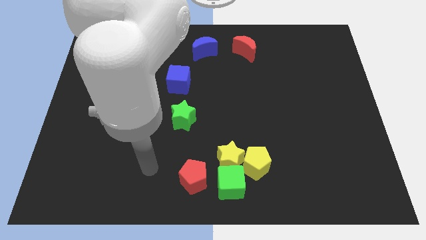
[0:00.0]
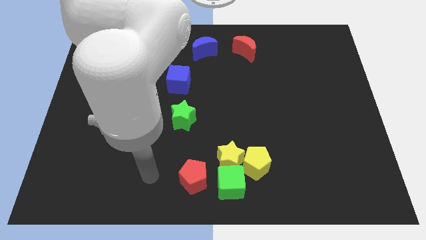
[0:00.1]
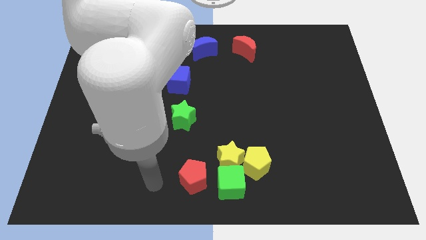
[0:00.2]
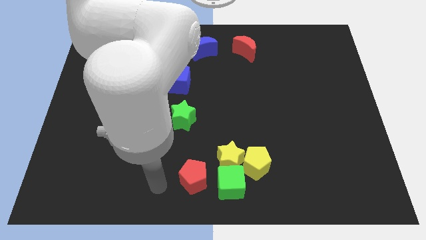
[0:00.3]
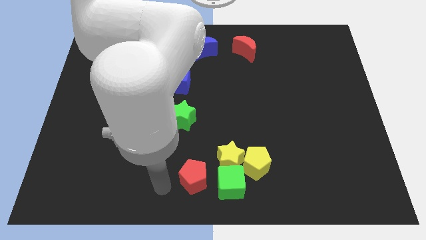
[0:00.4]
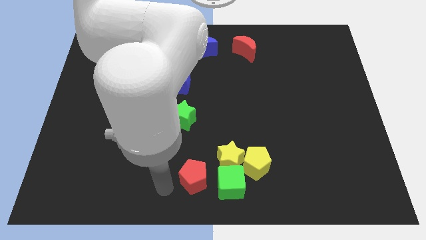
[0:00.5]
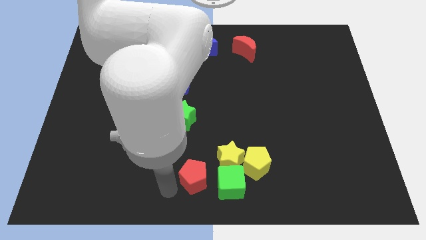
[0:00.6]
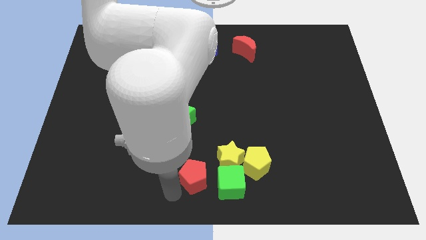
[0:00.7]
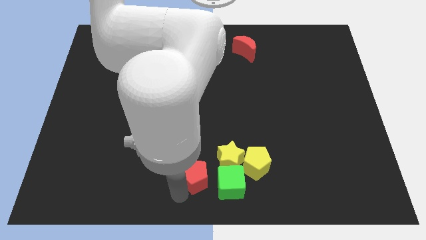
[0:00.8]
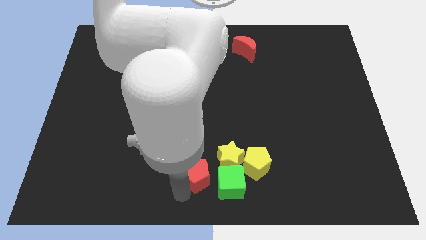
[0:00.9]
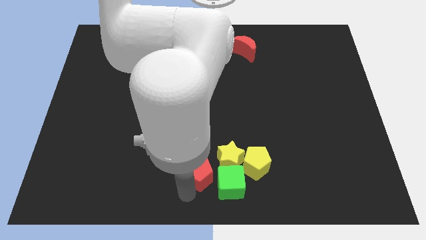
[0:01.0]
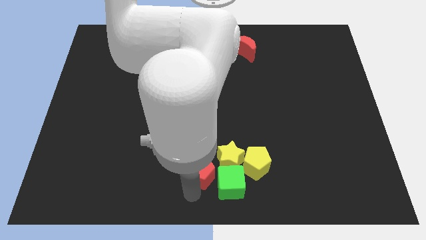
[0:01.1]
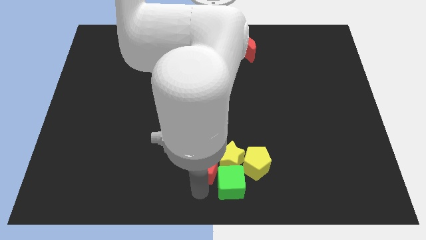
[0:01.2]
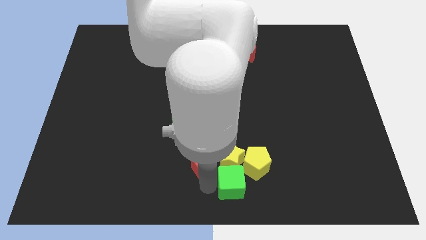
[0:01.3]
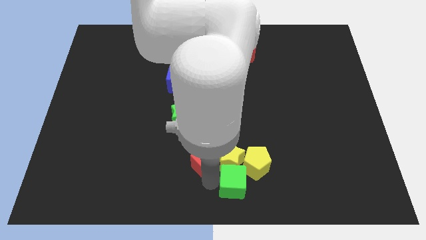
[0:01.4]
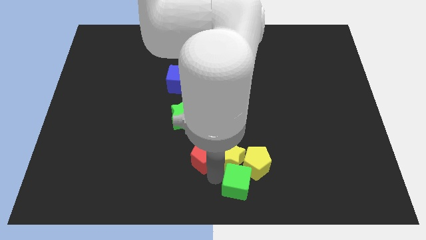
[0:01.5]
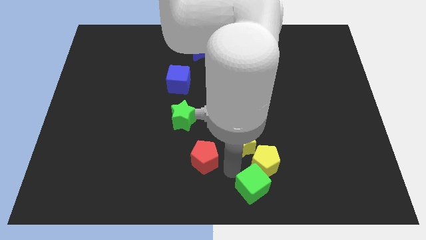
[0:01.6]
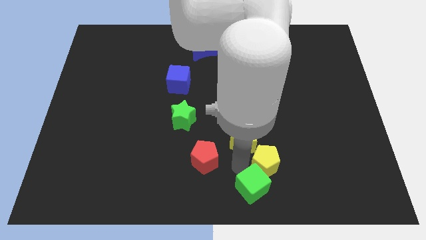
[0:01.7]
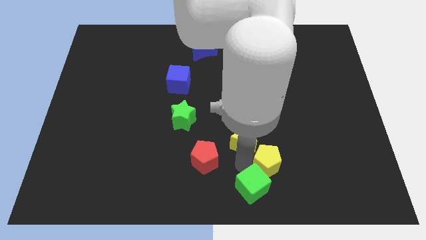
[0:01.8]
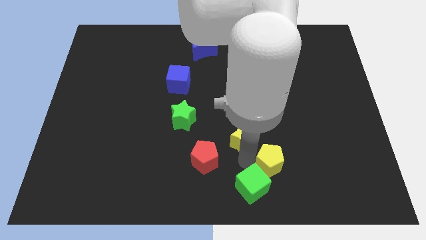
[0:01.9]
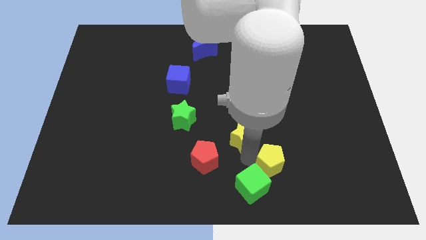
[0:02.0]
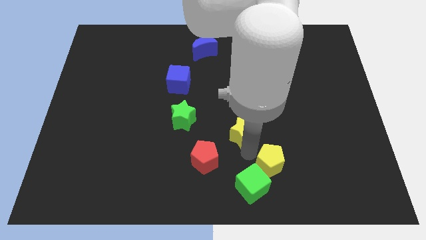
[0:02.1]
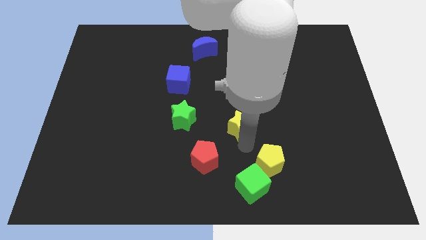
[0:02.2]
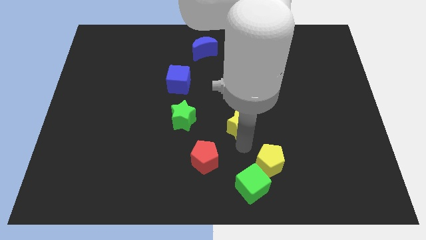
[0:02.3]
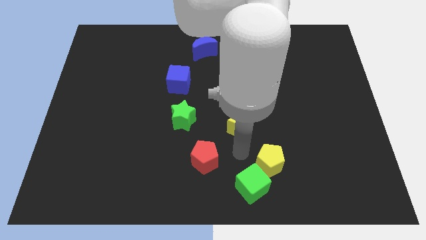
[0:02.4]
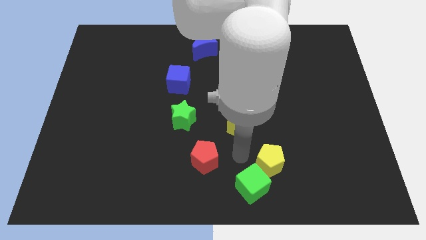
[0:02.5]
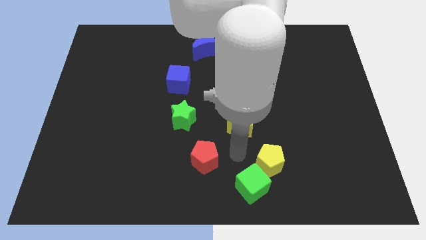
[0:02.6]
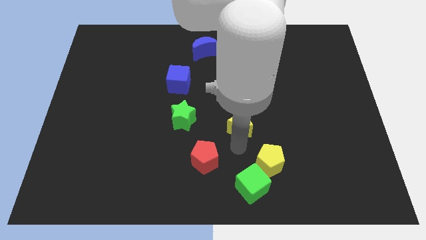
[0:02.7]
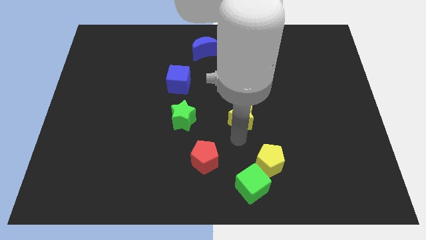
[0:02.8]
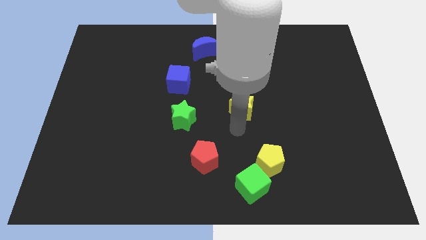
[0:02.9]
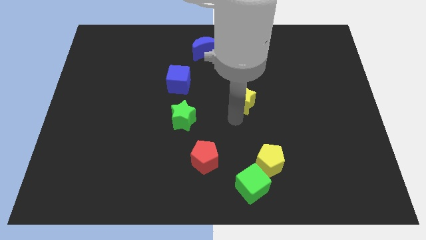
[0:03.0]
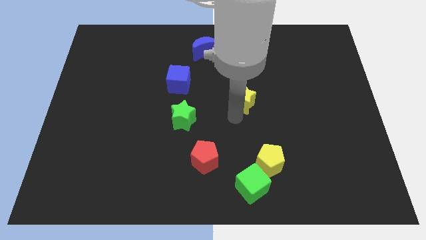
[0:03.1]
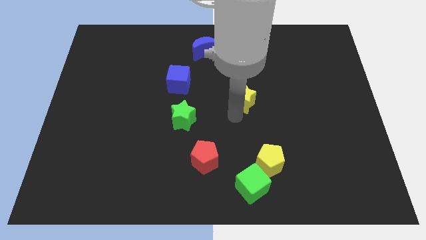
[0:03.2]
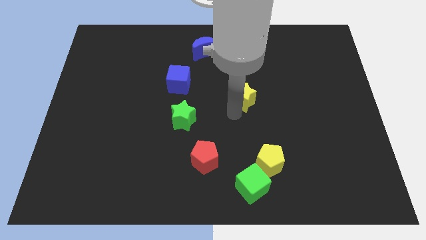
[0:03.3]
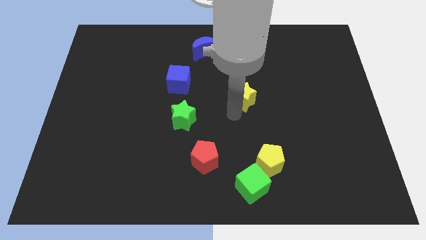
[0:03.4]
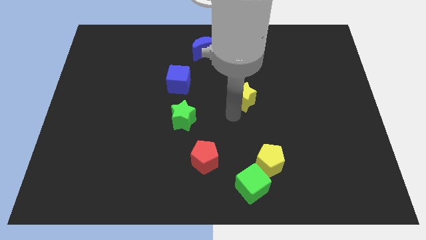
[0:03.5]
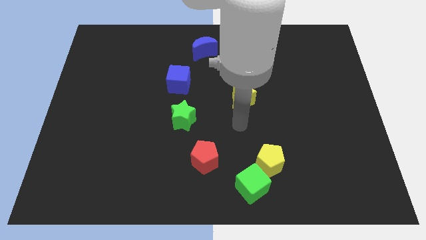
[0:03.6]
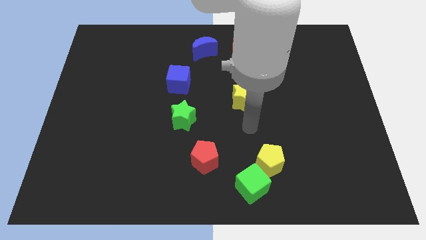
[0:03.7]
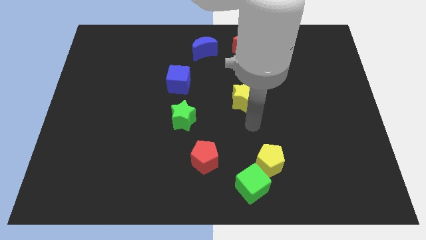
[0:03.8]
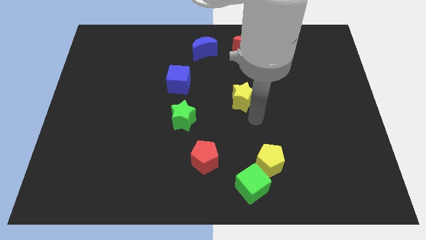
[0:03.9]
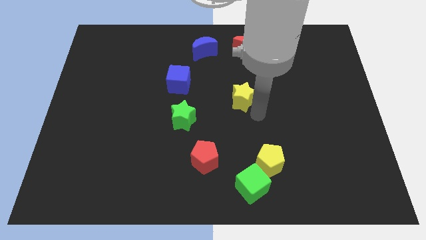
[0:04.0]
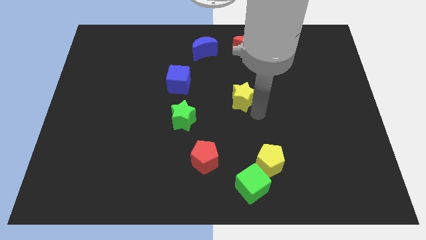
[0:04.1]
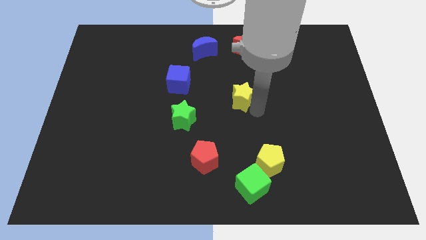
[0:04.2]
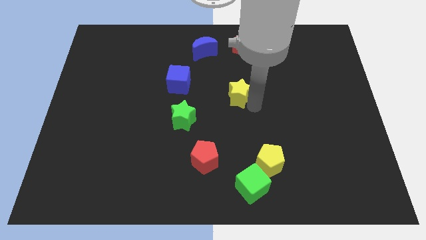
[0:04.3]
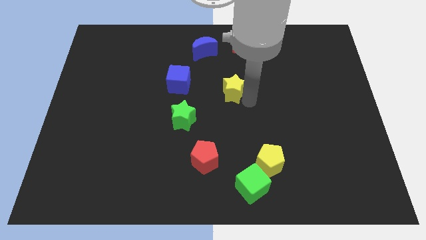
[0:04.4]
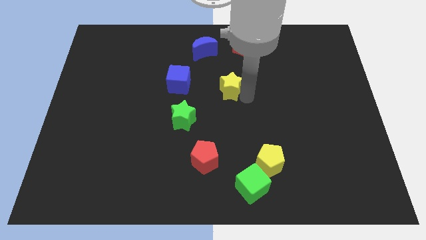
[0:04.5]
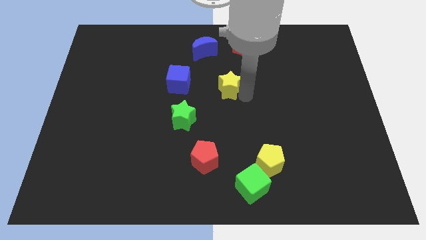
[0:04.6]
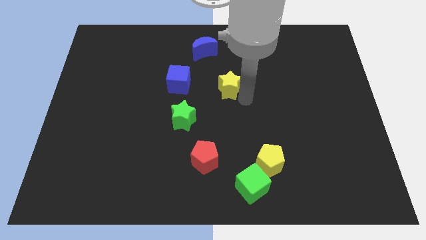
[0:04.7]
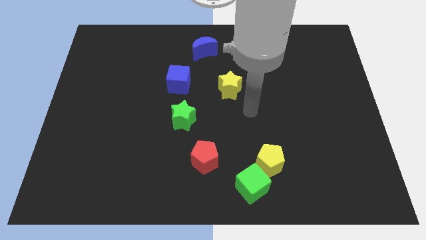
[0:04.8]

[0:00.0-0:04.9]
place the yellow star at the center of the board

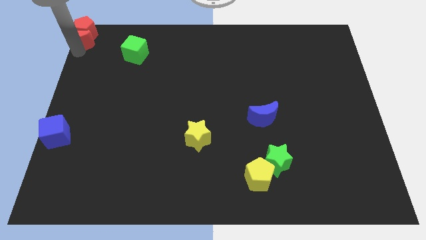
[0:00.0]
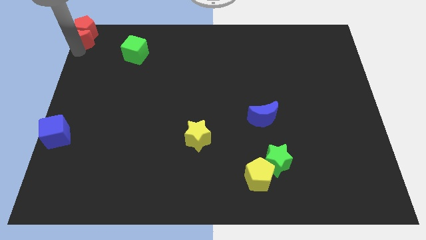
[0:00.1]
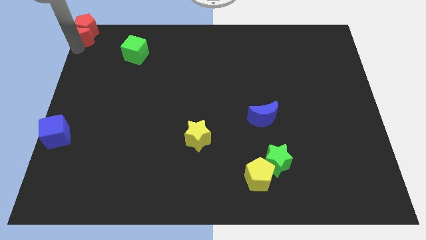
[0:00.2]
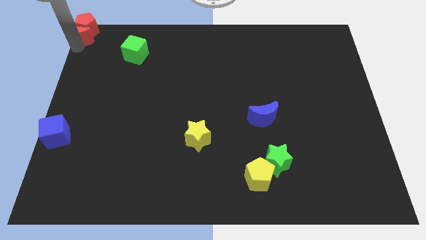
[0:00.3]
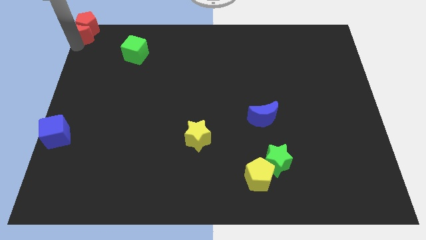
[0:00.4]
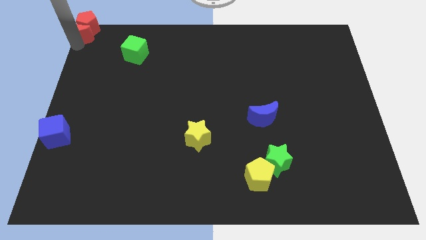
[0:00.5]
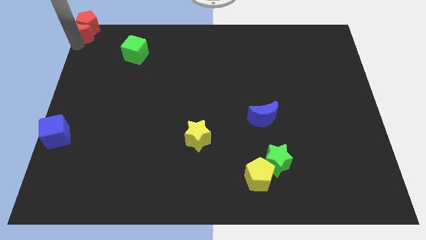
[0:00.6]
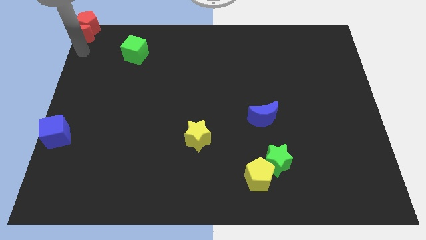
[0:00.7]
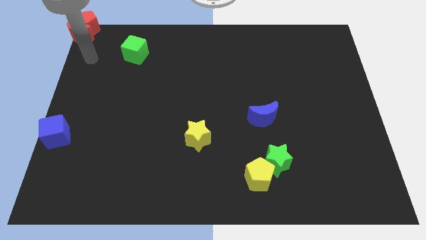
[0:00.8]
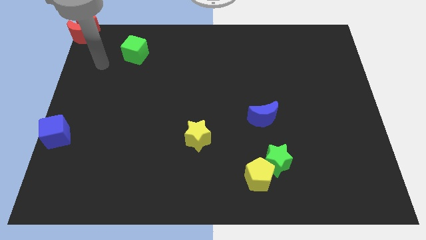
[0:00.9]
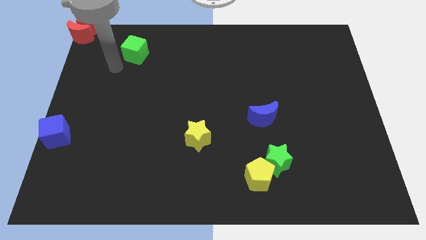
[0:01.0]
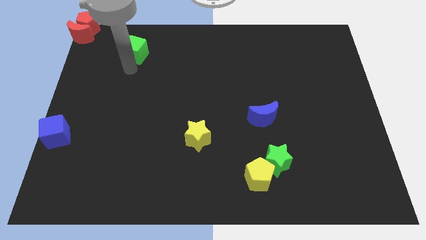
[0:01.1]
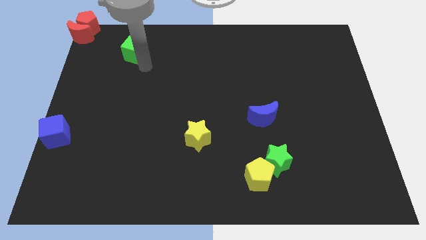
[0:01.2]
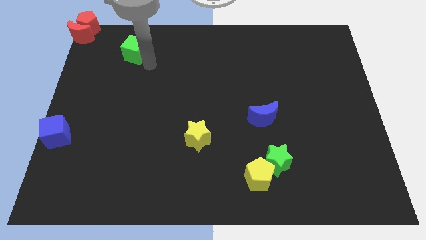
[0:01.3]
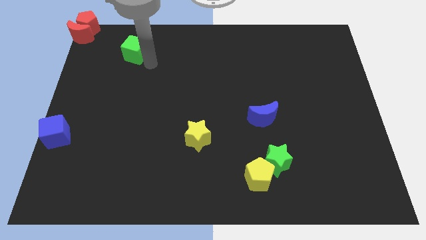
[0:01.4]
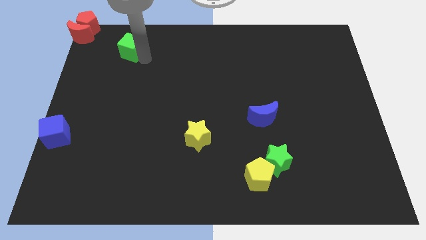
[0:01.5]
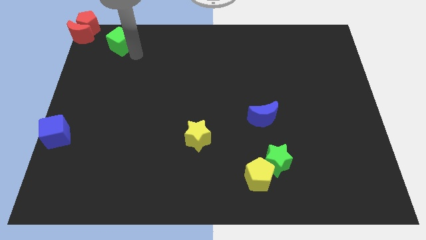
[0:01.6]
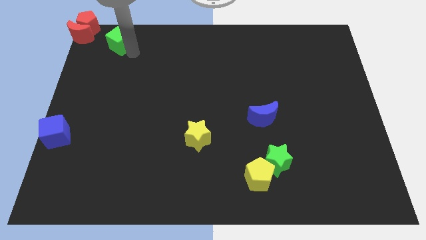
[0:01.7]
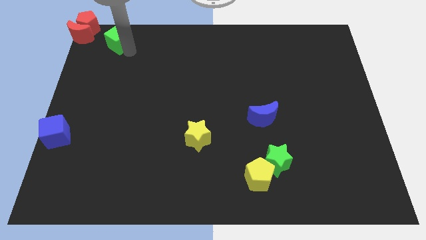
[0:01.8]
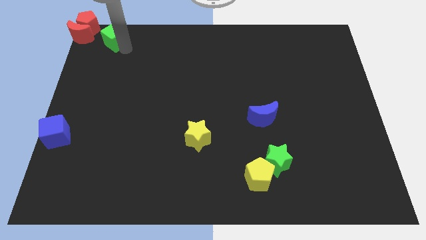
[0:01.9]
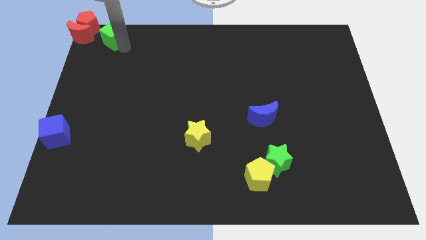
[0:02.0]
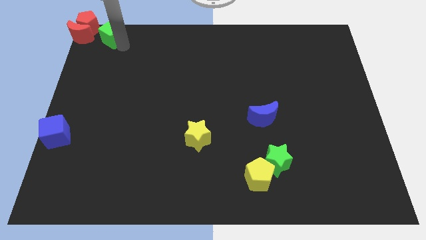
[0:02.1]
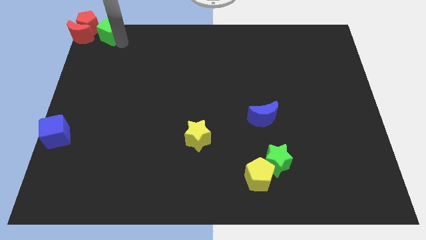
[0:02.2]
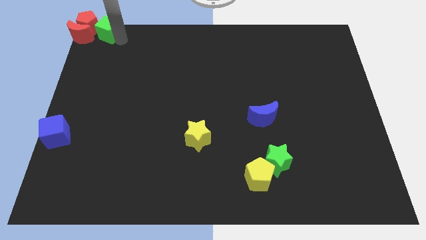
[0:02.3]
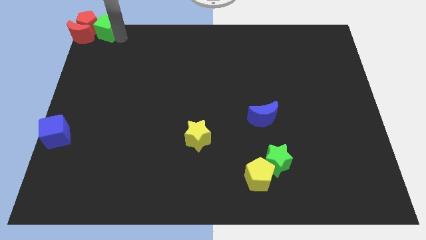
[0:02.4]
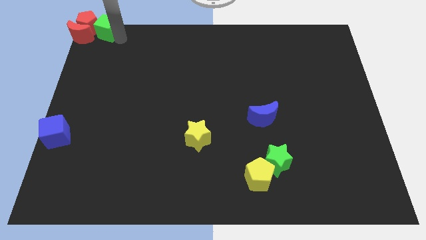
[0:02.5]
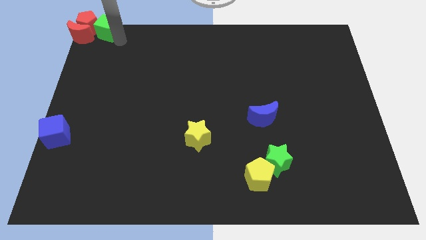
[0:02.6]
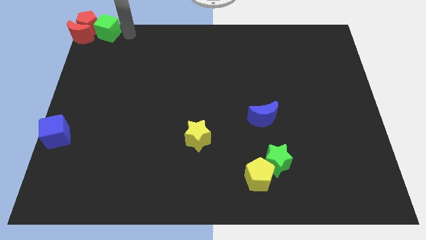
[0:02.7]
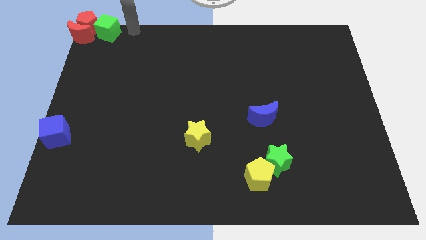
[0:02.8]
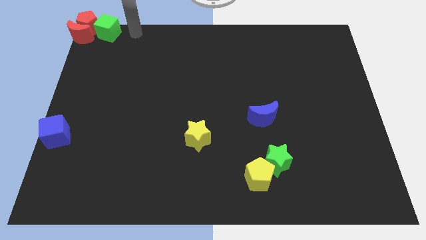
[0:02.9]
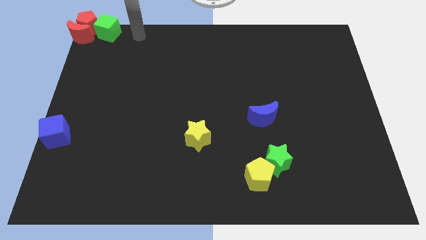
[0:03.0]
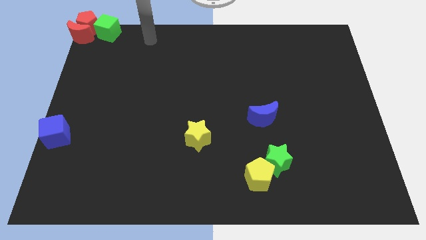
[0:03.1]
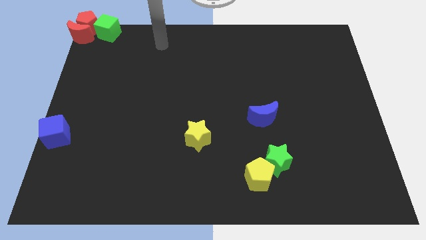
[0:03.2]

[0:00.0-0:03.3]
move the green cube to the right side of the red pentagon

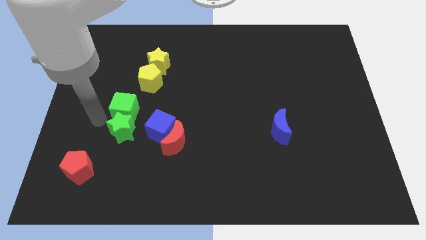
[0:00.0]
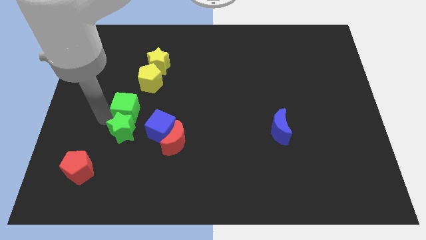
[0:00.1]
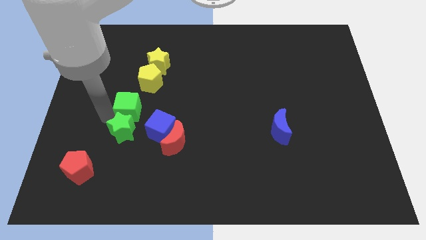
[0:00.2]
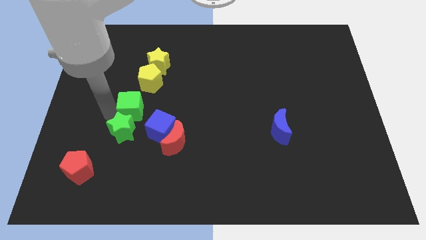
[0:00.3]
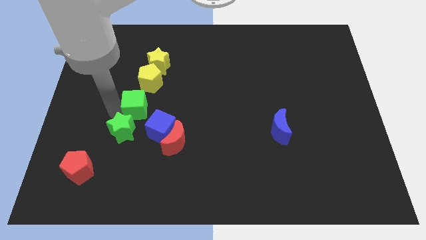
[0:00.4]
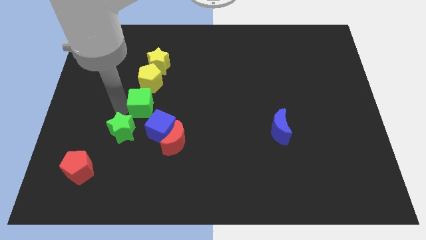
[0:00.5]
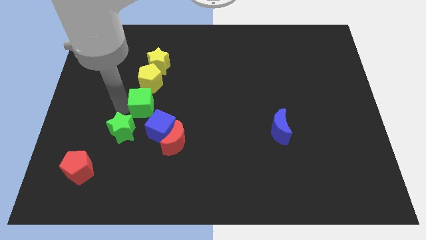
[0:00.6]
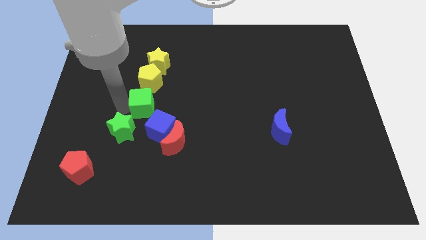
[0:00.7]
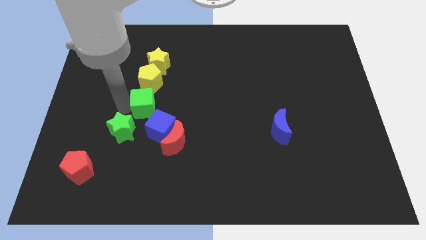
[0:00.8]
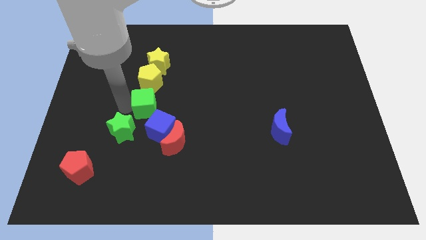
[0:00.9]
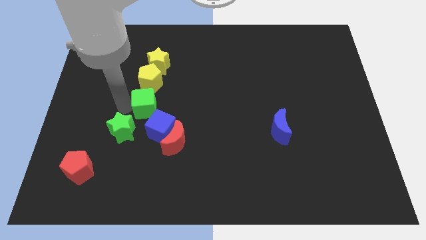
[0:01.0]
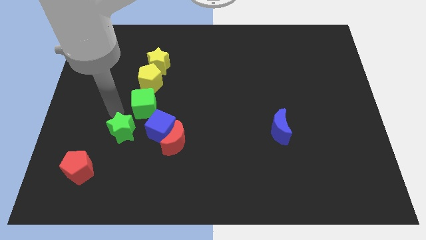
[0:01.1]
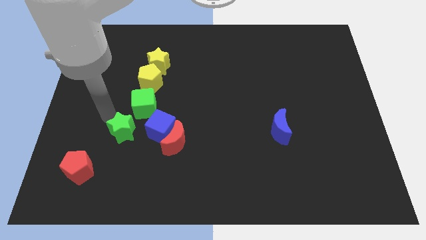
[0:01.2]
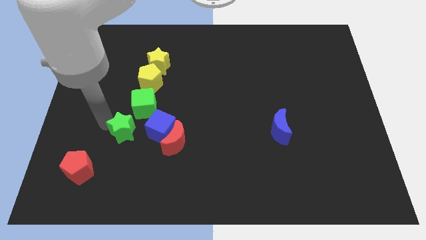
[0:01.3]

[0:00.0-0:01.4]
move the green cube below the yellow pentagon
